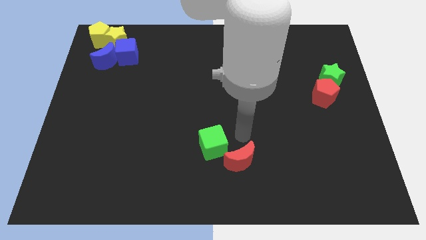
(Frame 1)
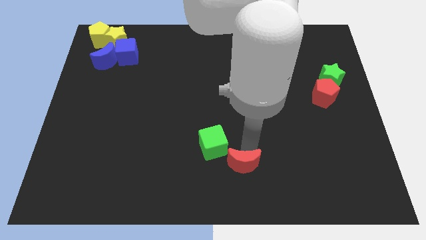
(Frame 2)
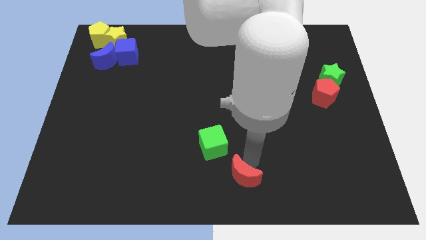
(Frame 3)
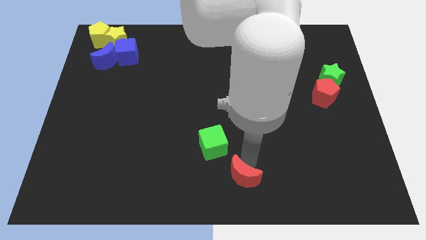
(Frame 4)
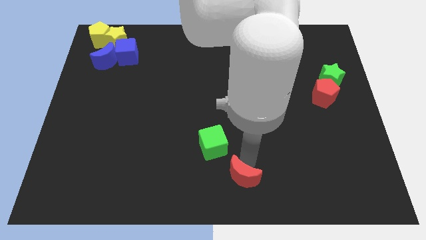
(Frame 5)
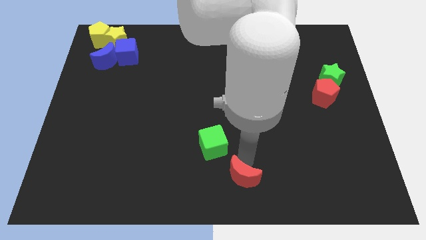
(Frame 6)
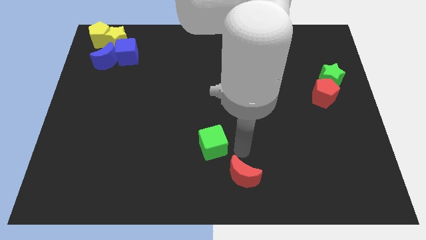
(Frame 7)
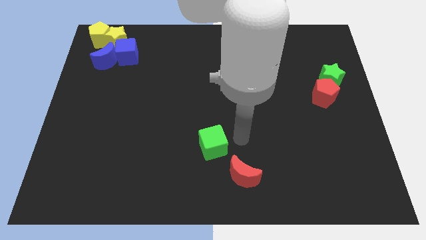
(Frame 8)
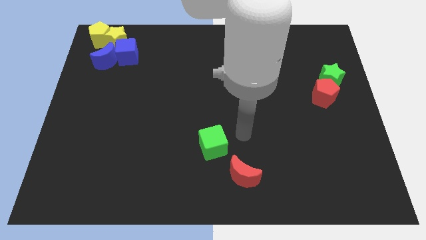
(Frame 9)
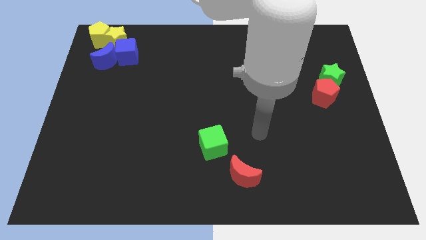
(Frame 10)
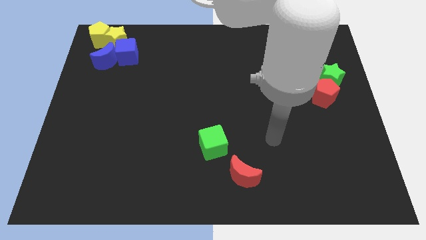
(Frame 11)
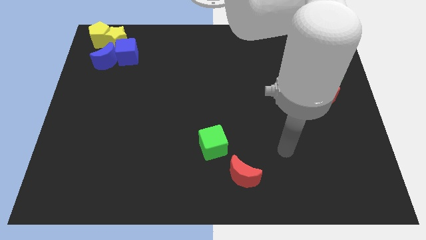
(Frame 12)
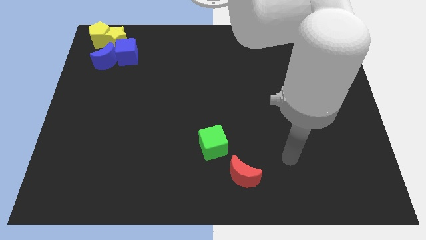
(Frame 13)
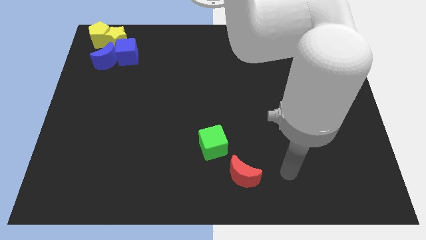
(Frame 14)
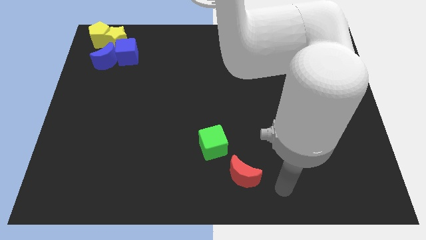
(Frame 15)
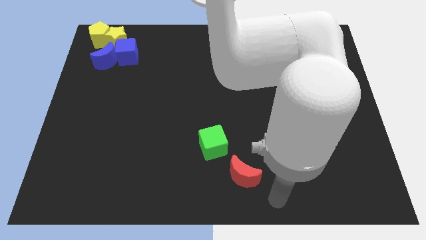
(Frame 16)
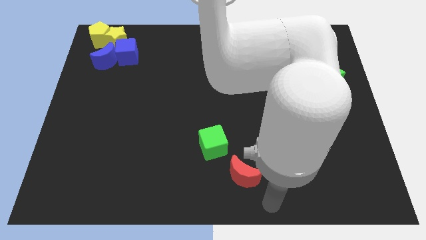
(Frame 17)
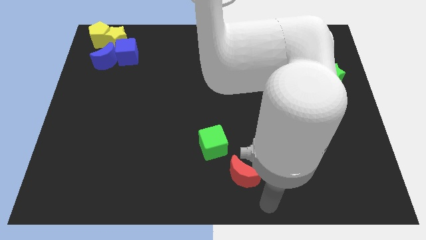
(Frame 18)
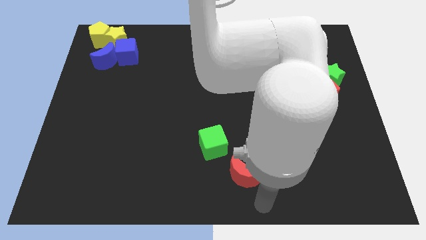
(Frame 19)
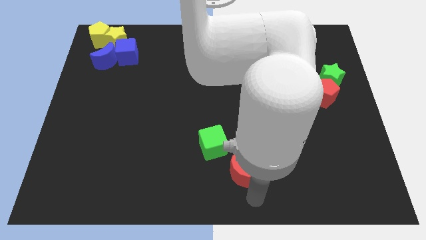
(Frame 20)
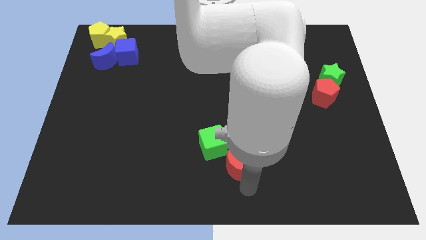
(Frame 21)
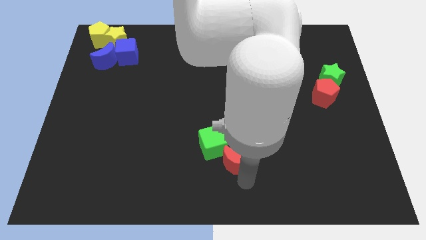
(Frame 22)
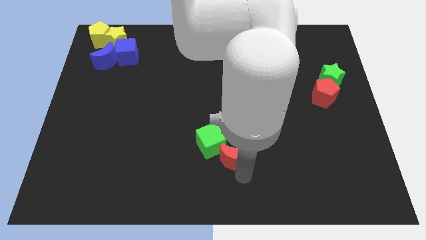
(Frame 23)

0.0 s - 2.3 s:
push red crescent towards green cube

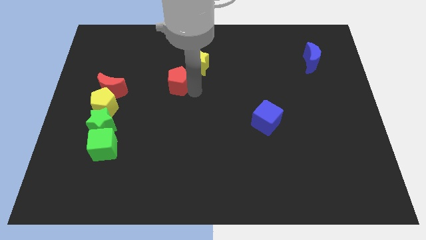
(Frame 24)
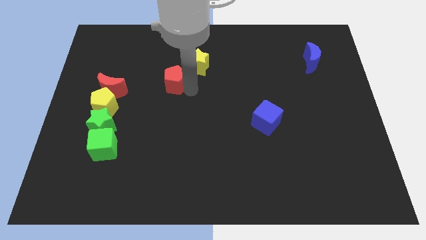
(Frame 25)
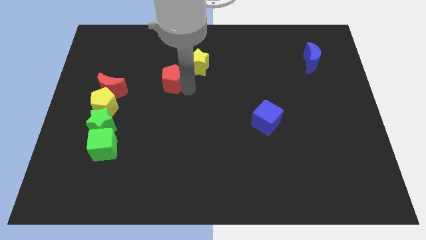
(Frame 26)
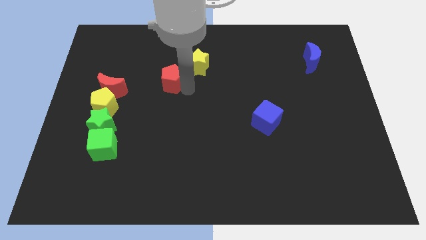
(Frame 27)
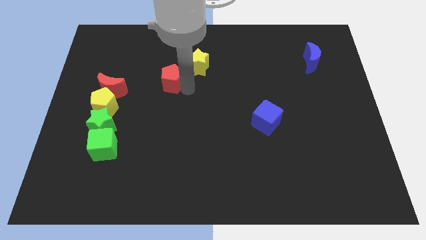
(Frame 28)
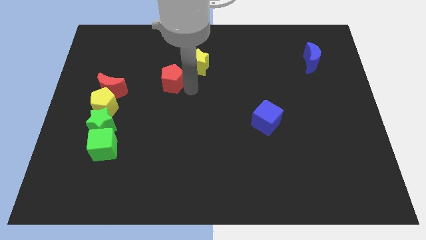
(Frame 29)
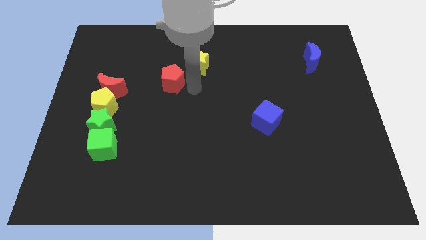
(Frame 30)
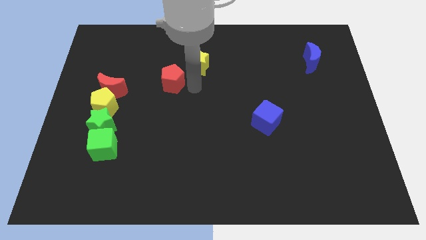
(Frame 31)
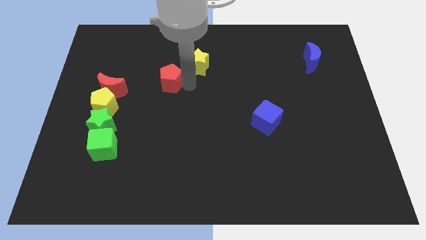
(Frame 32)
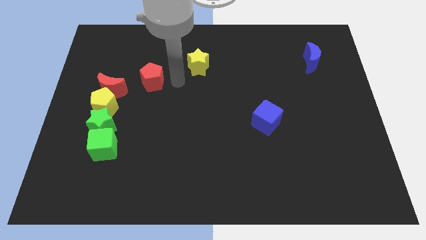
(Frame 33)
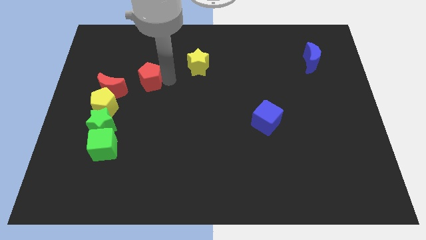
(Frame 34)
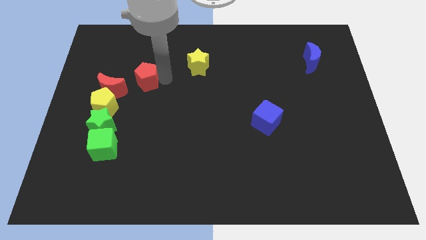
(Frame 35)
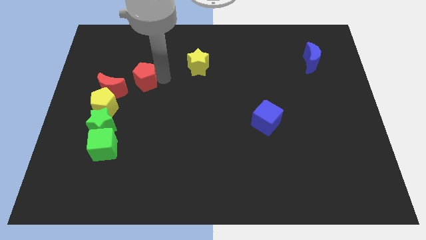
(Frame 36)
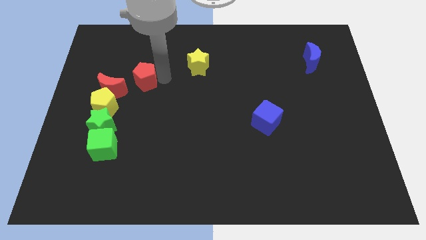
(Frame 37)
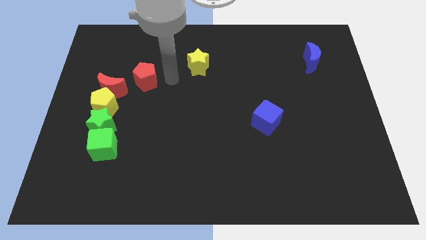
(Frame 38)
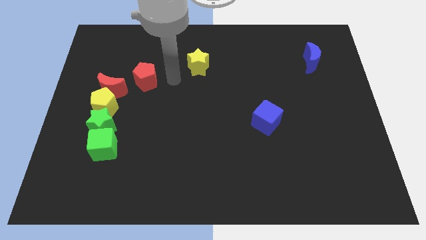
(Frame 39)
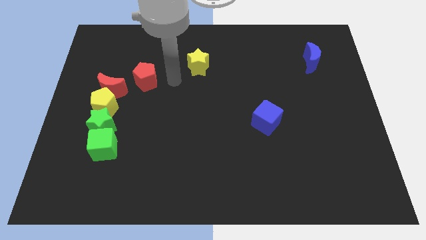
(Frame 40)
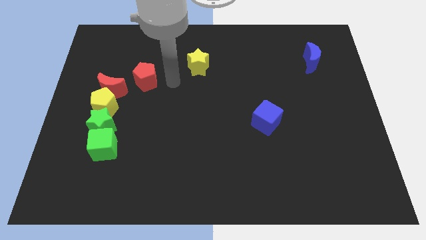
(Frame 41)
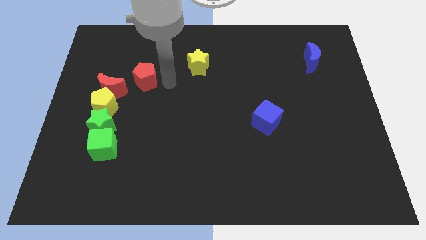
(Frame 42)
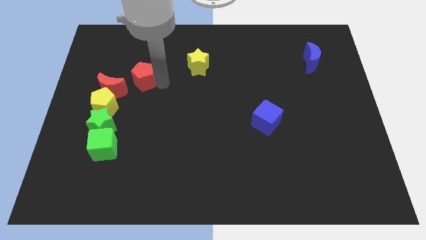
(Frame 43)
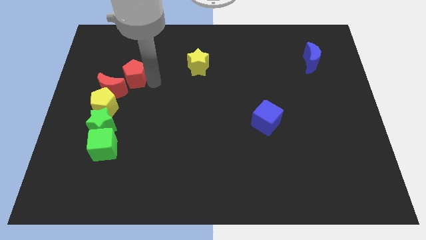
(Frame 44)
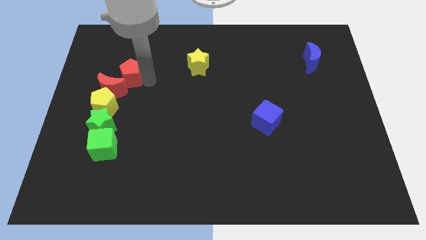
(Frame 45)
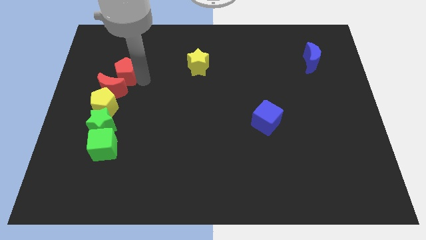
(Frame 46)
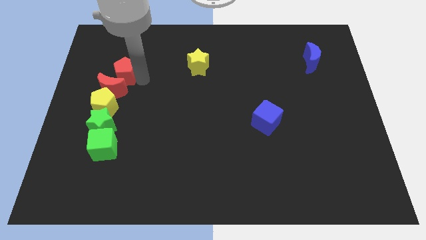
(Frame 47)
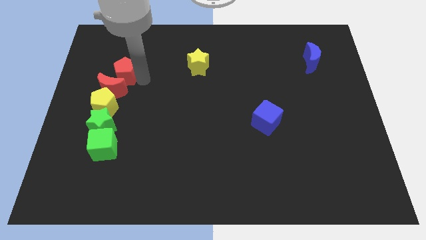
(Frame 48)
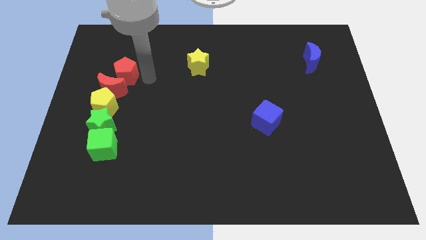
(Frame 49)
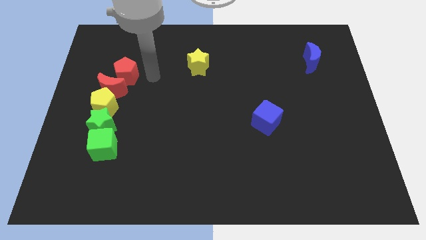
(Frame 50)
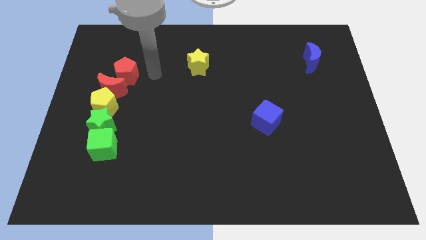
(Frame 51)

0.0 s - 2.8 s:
put the red pentagon above the red crescent

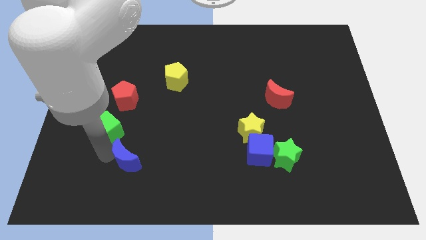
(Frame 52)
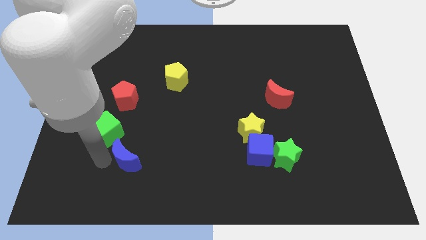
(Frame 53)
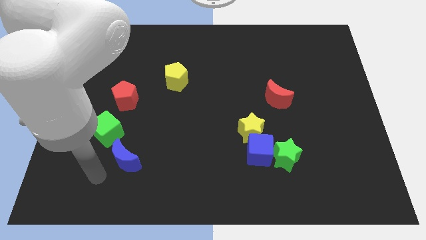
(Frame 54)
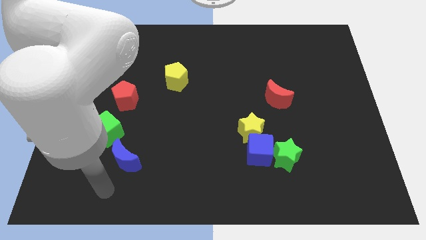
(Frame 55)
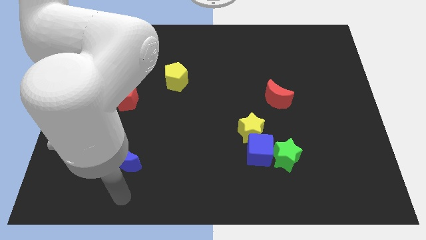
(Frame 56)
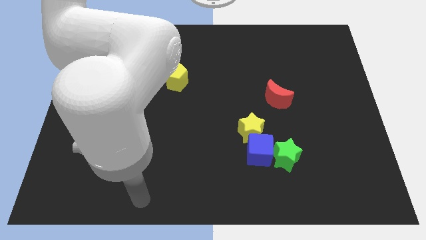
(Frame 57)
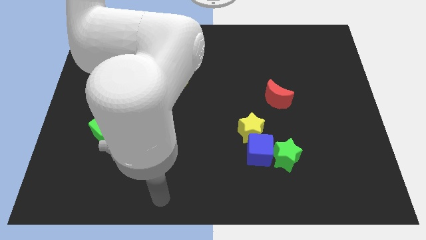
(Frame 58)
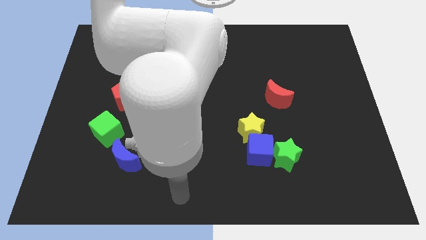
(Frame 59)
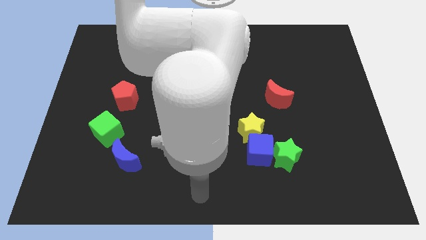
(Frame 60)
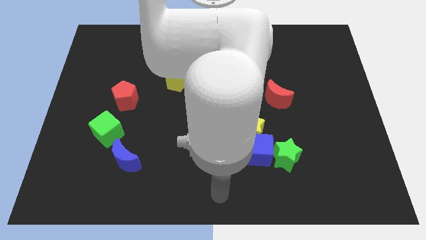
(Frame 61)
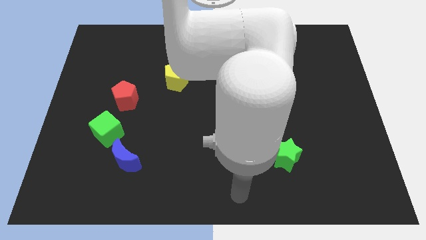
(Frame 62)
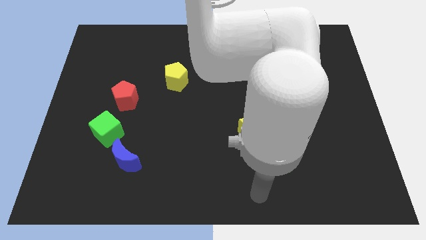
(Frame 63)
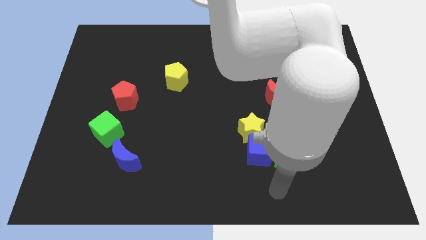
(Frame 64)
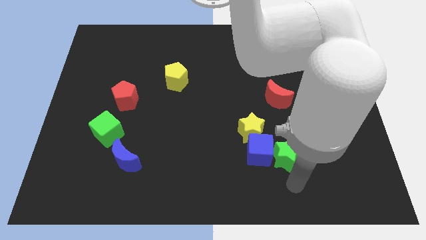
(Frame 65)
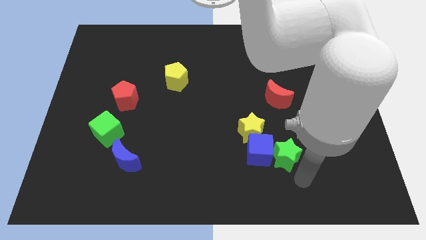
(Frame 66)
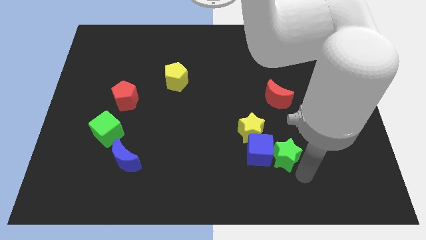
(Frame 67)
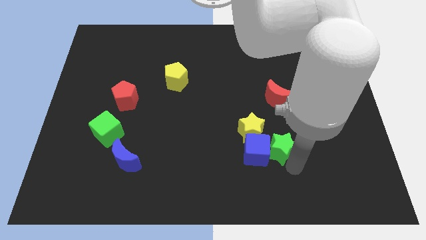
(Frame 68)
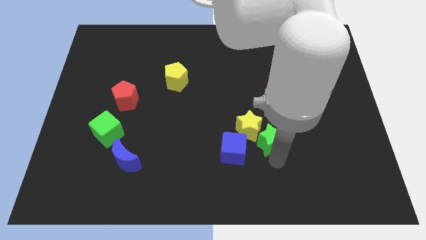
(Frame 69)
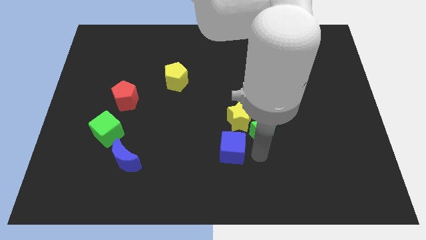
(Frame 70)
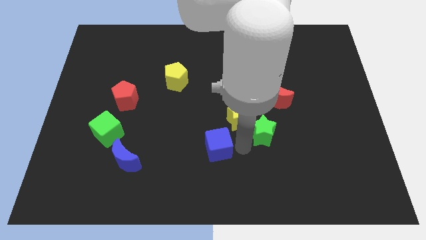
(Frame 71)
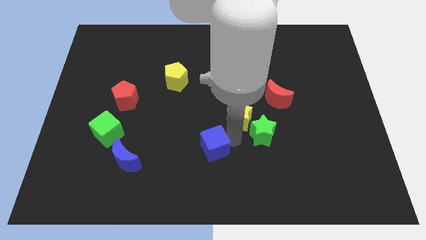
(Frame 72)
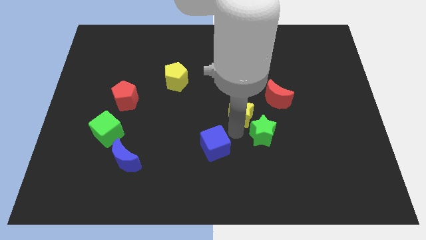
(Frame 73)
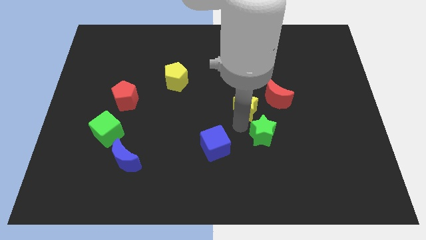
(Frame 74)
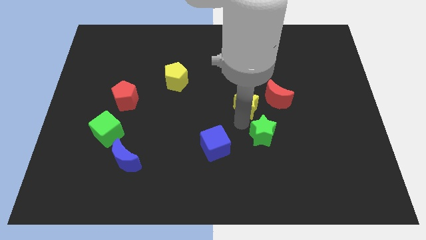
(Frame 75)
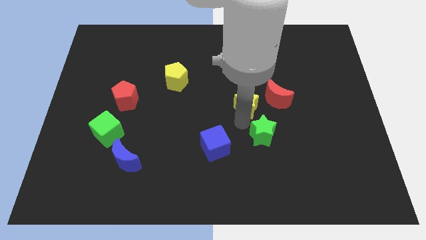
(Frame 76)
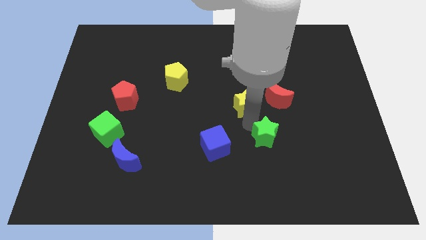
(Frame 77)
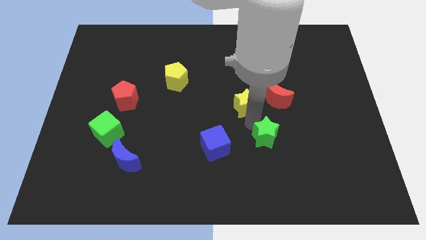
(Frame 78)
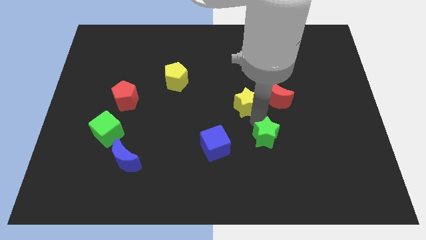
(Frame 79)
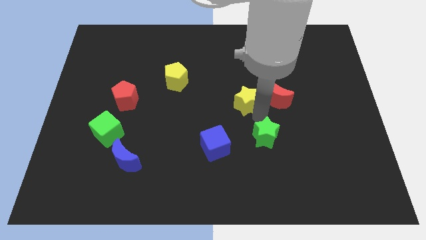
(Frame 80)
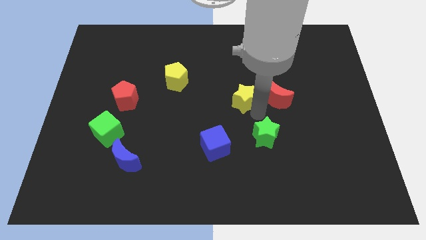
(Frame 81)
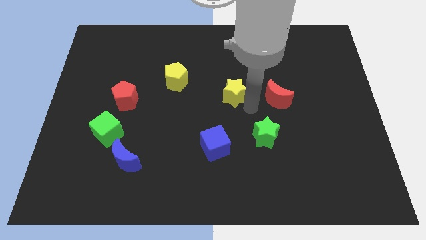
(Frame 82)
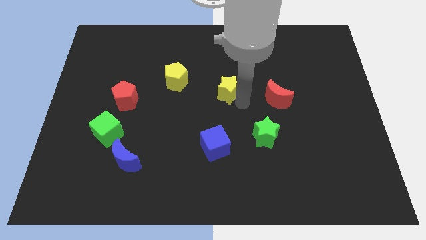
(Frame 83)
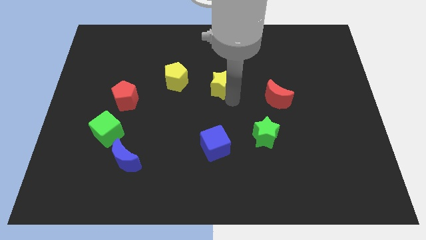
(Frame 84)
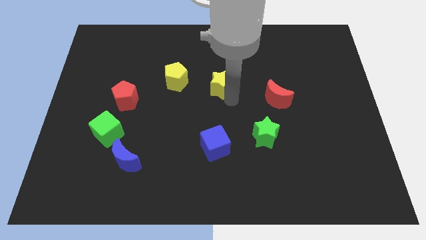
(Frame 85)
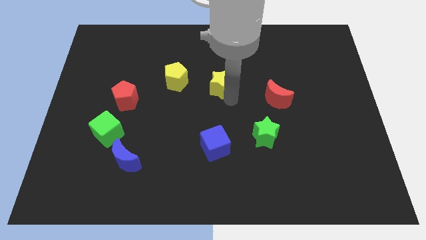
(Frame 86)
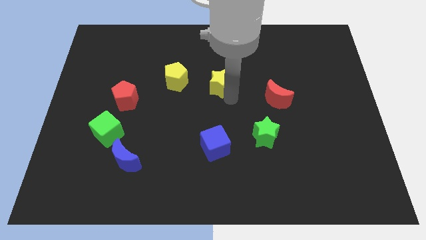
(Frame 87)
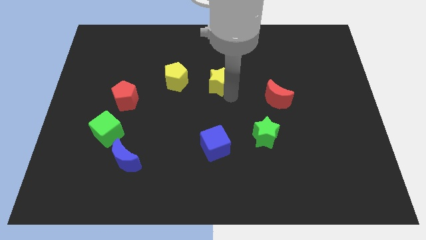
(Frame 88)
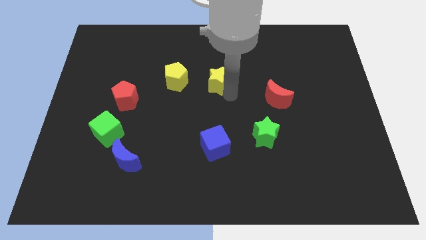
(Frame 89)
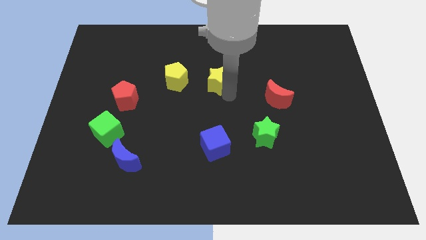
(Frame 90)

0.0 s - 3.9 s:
push the yellow star to the right of the yellow pentagon
